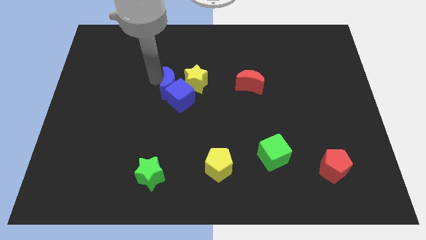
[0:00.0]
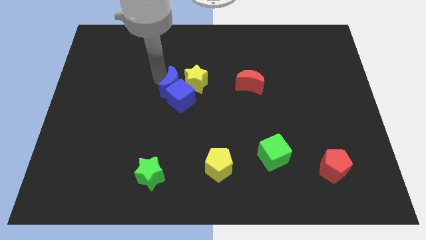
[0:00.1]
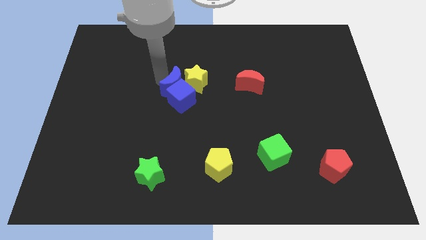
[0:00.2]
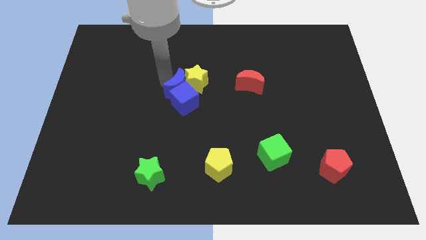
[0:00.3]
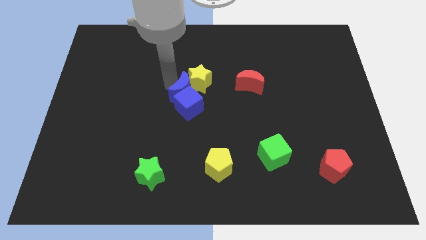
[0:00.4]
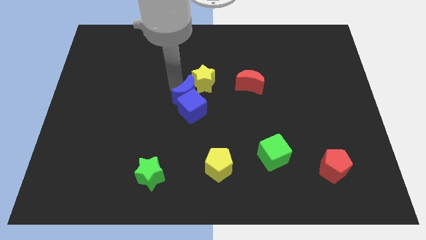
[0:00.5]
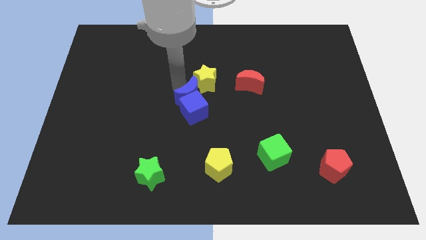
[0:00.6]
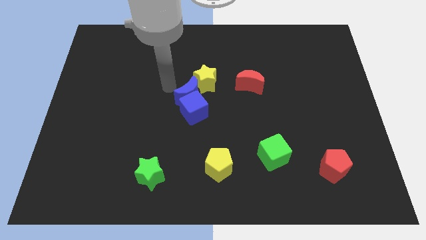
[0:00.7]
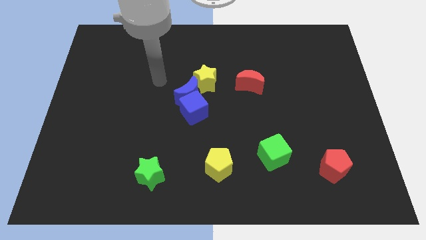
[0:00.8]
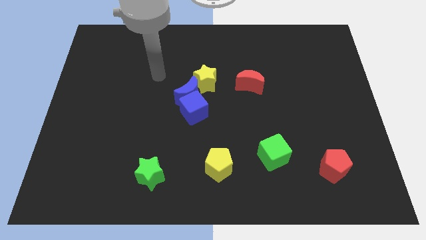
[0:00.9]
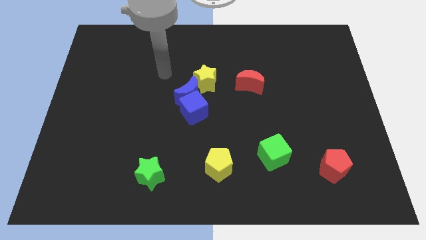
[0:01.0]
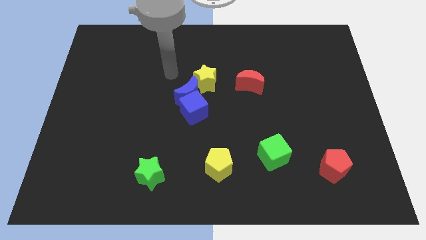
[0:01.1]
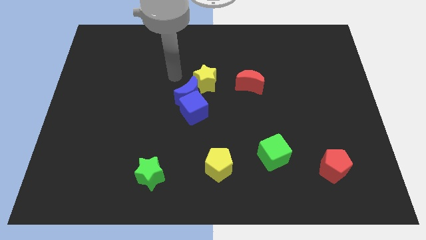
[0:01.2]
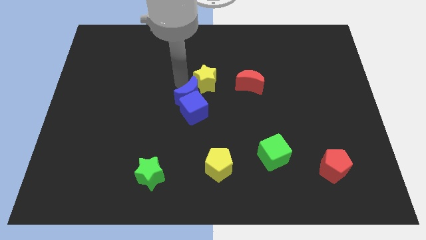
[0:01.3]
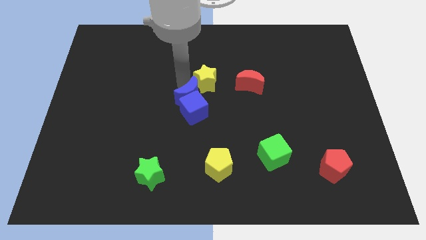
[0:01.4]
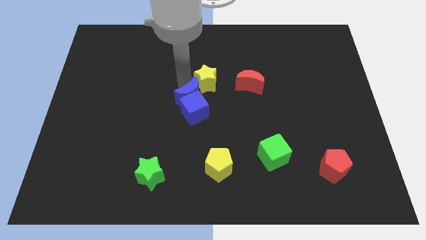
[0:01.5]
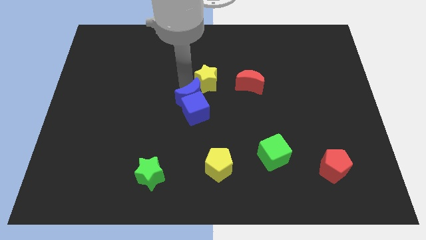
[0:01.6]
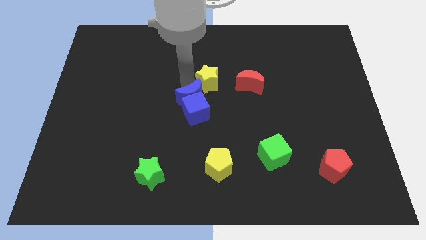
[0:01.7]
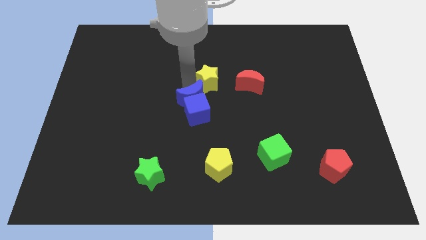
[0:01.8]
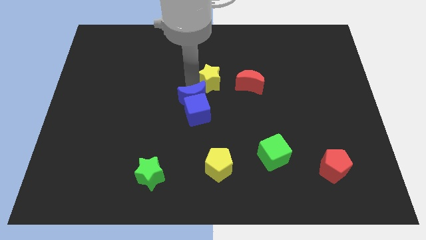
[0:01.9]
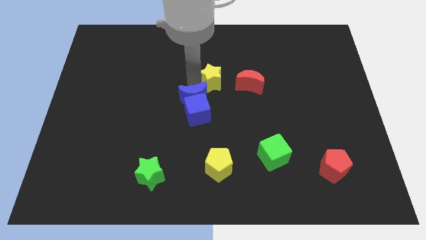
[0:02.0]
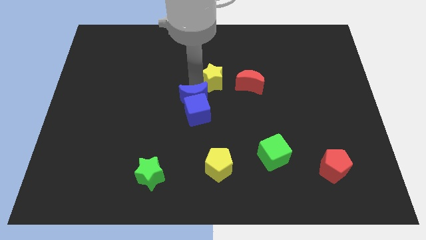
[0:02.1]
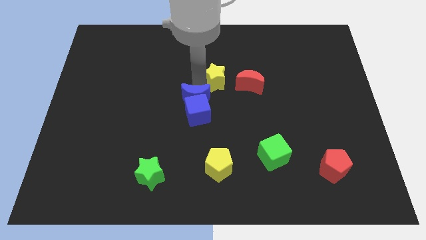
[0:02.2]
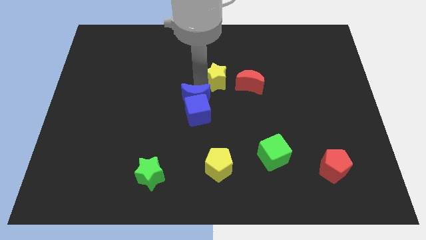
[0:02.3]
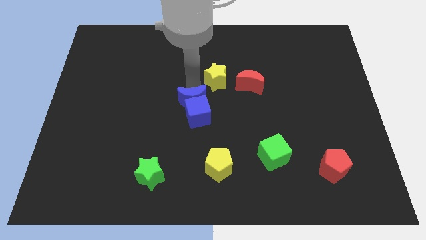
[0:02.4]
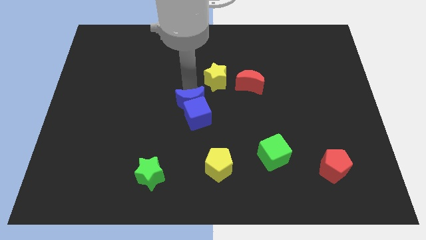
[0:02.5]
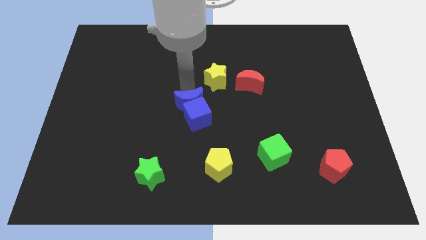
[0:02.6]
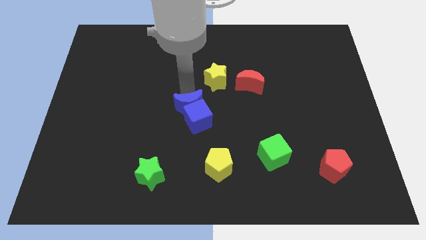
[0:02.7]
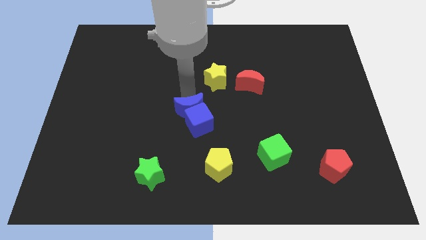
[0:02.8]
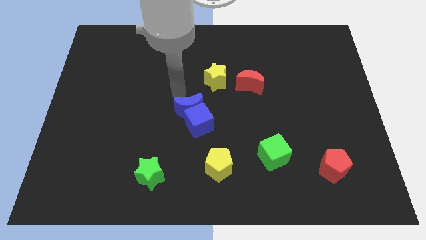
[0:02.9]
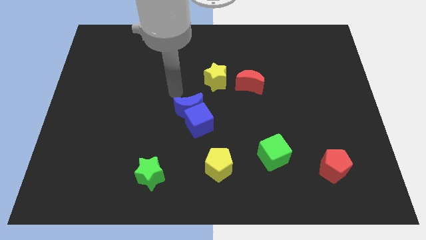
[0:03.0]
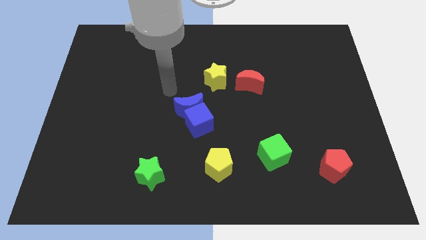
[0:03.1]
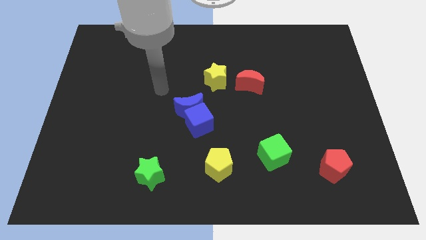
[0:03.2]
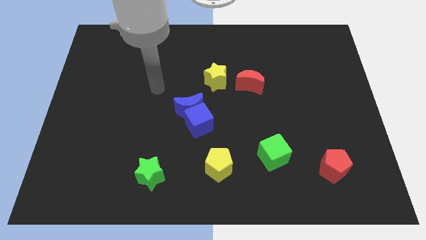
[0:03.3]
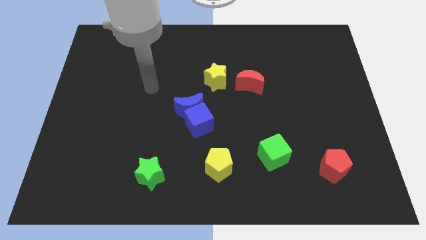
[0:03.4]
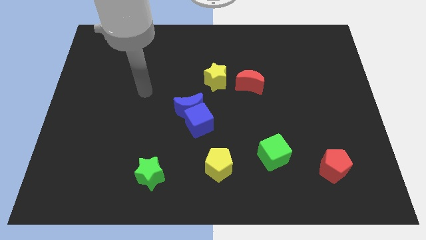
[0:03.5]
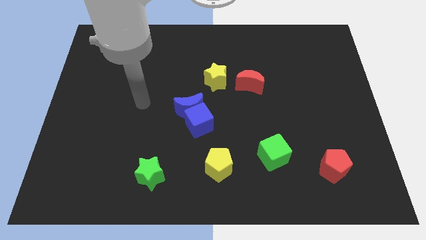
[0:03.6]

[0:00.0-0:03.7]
push the blue blocks slightly to the bottom

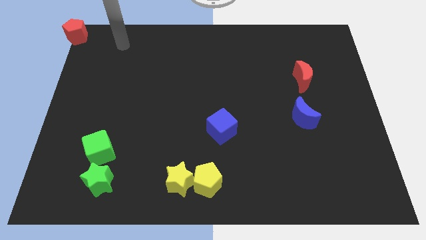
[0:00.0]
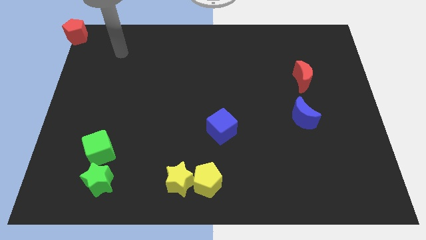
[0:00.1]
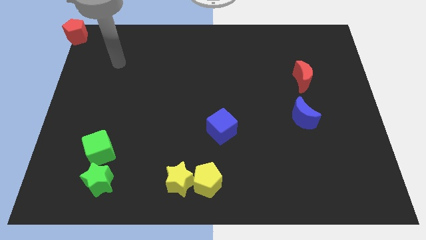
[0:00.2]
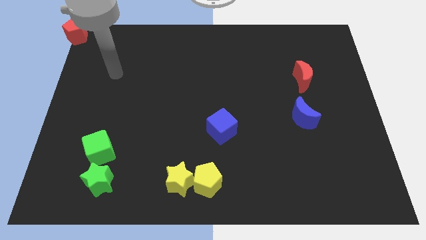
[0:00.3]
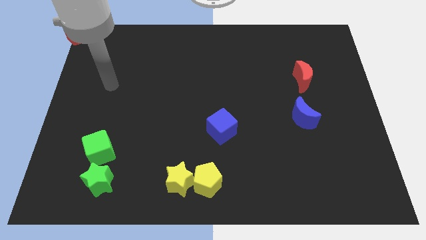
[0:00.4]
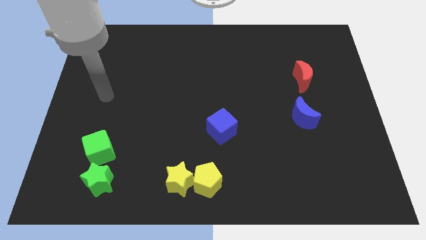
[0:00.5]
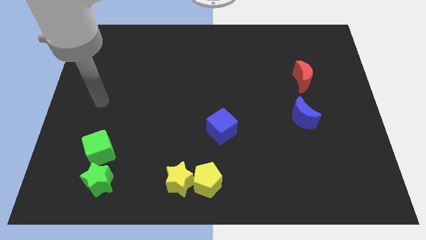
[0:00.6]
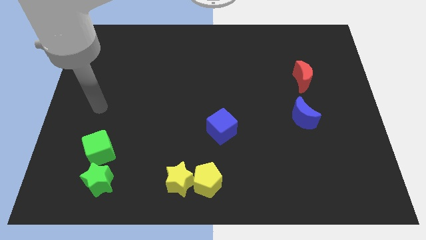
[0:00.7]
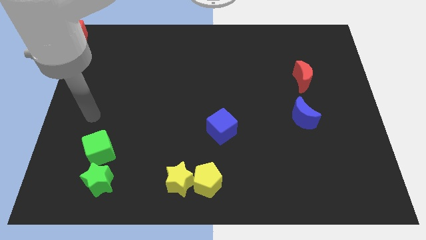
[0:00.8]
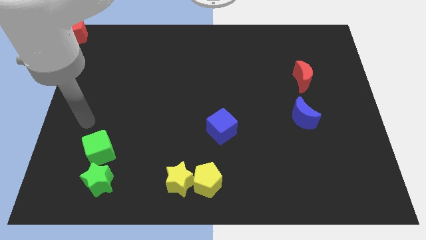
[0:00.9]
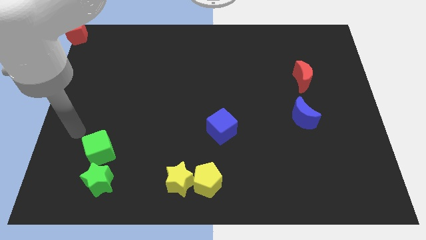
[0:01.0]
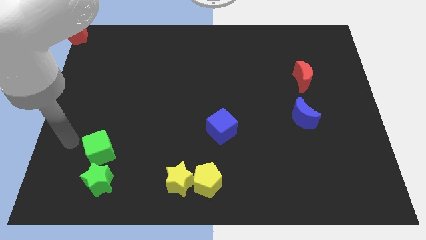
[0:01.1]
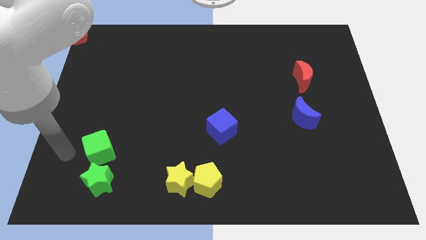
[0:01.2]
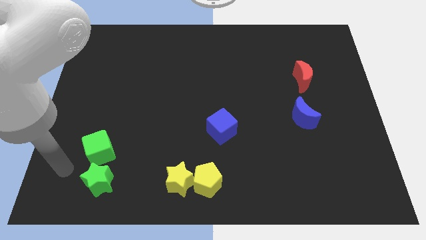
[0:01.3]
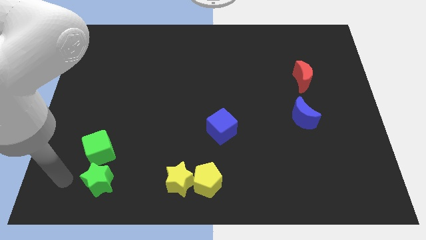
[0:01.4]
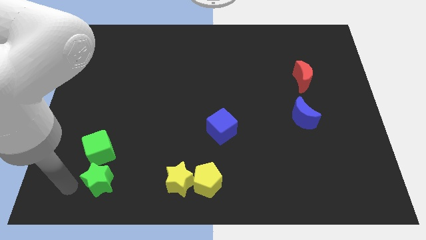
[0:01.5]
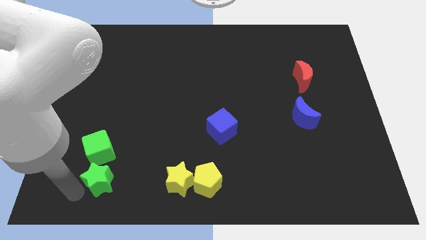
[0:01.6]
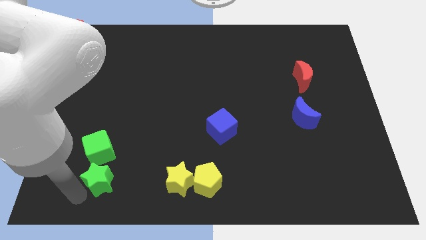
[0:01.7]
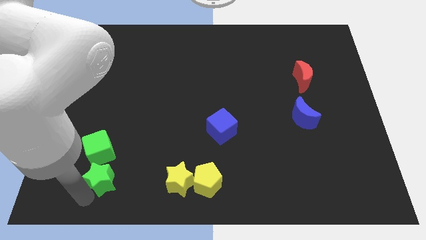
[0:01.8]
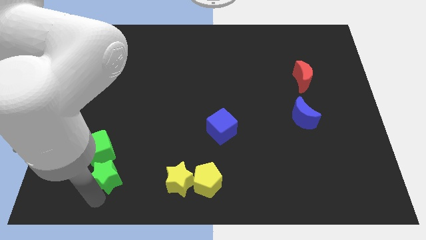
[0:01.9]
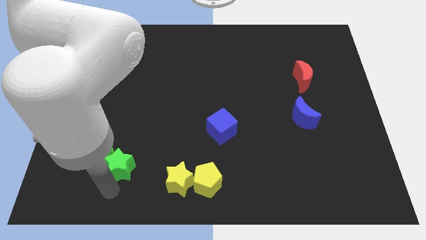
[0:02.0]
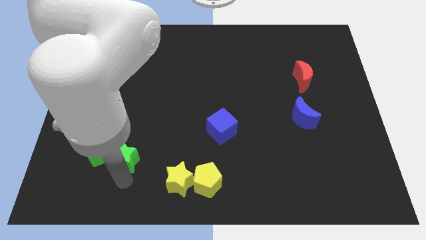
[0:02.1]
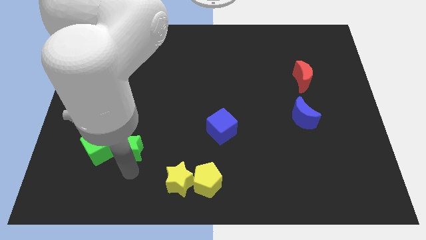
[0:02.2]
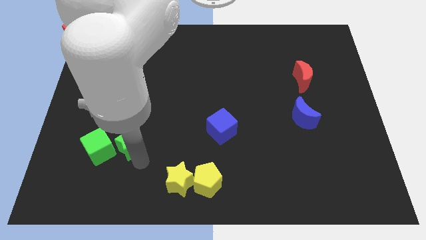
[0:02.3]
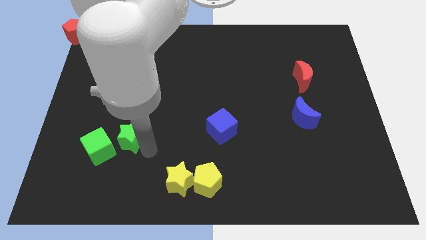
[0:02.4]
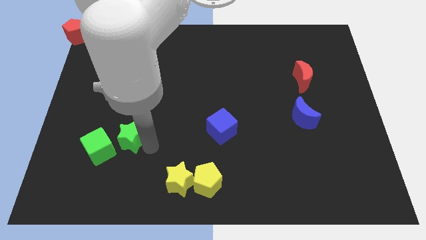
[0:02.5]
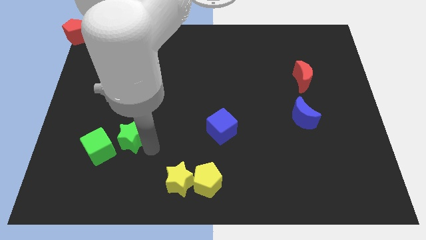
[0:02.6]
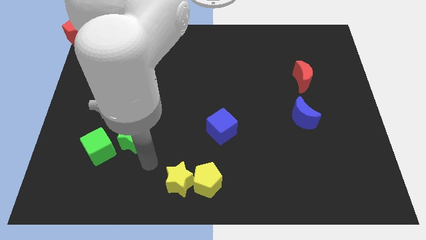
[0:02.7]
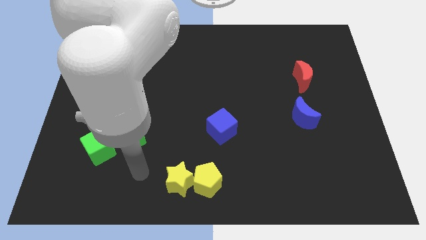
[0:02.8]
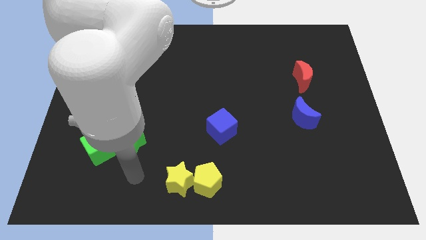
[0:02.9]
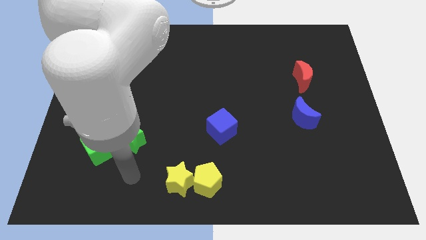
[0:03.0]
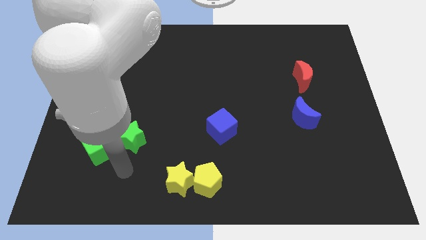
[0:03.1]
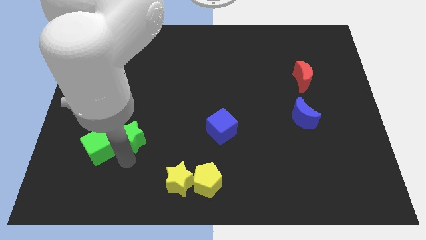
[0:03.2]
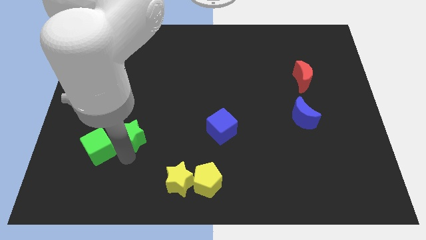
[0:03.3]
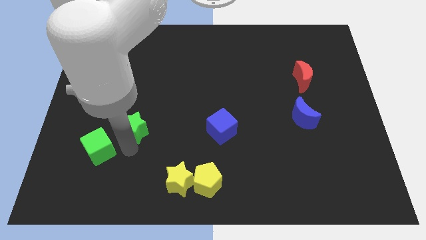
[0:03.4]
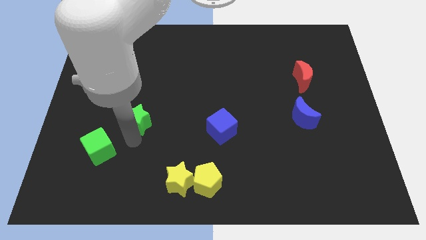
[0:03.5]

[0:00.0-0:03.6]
place the green star left to the blue cube

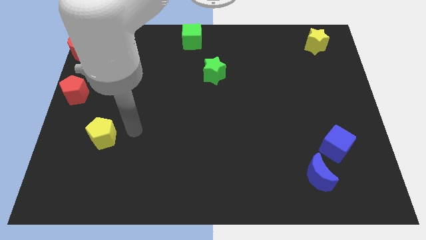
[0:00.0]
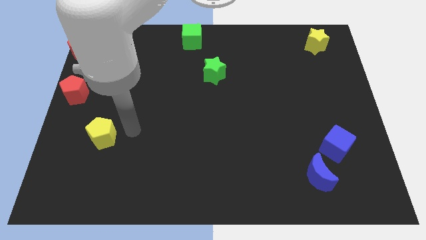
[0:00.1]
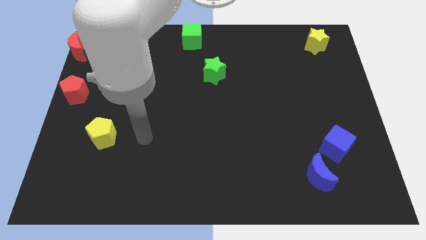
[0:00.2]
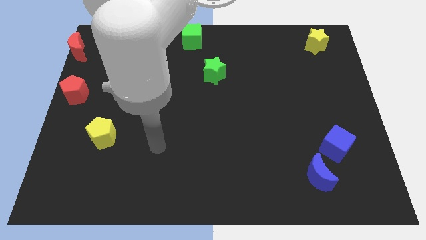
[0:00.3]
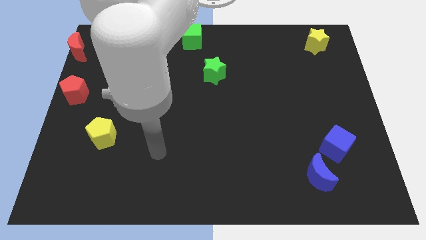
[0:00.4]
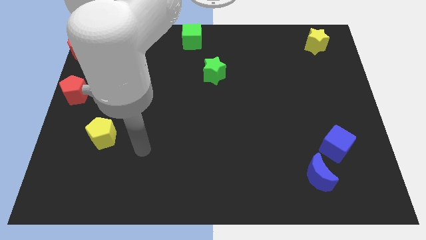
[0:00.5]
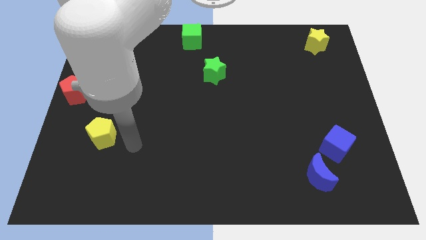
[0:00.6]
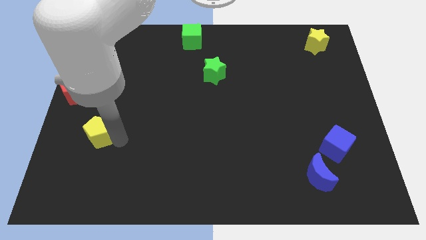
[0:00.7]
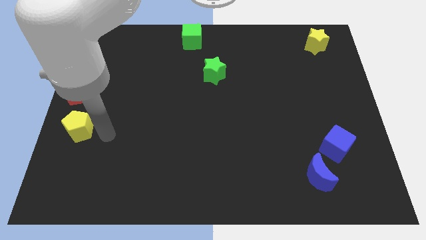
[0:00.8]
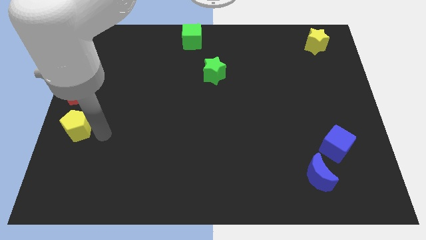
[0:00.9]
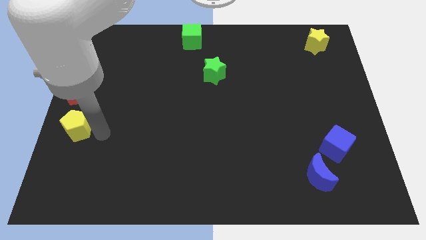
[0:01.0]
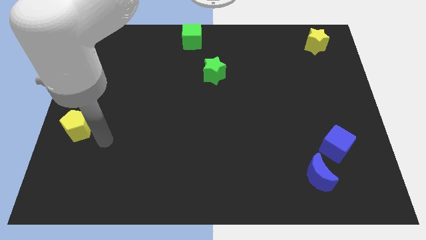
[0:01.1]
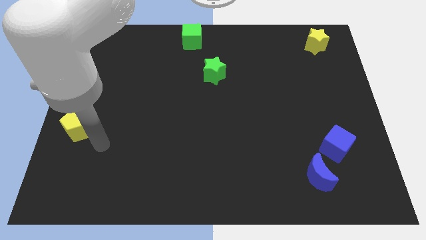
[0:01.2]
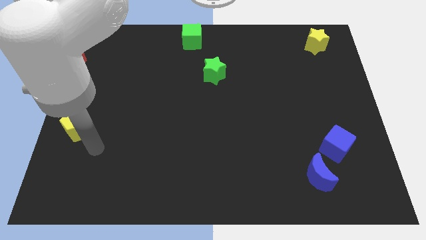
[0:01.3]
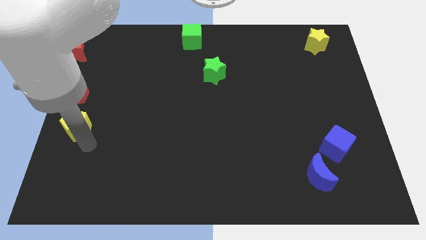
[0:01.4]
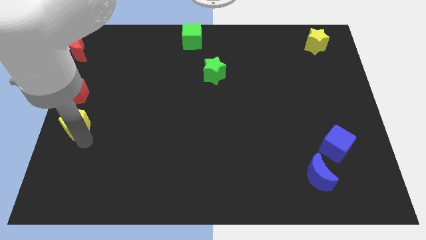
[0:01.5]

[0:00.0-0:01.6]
push the yellow pentagon towards below to the red pentagon

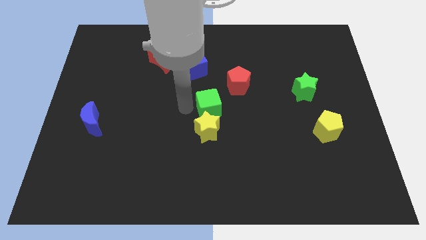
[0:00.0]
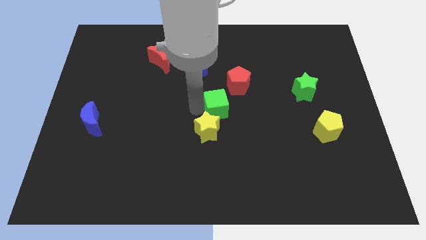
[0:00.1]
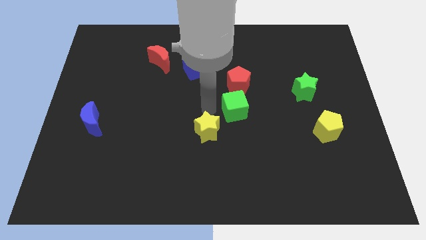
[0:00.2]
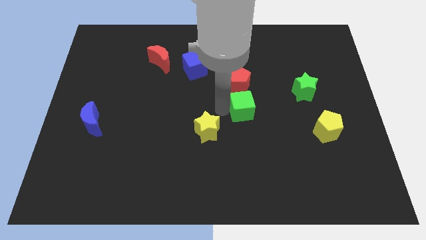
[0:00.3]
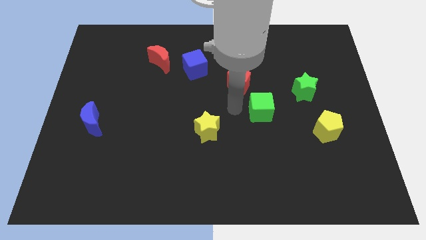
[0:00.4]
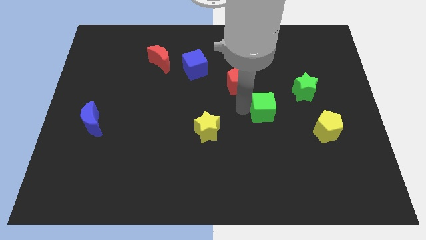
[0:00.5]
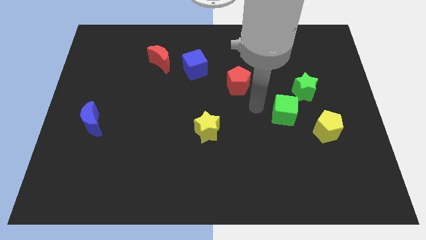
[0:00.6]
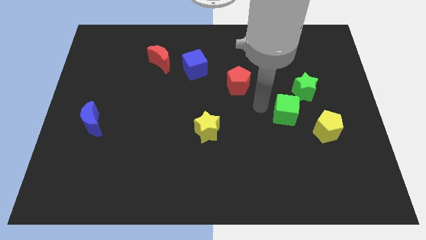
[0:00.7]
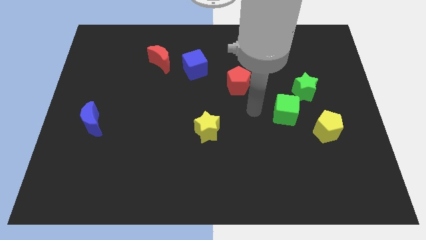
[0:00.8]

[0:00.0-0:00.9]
push the green cube to the bottom left side of the green star
